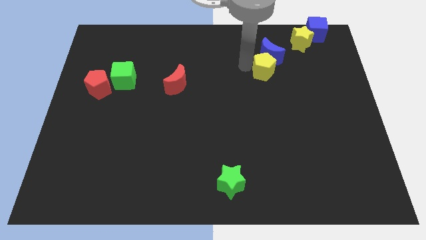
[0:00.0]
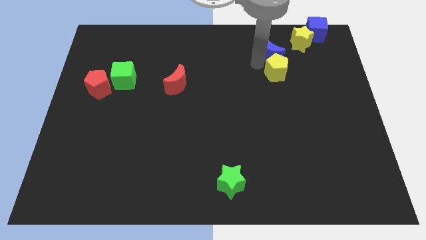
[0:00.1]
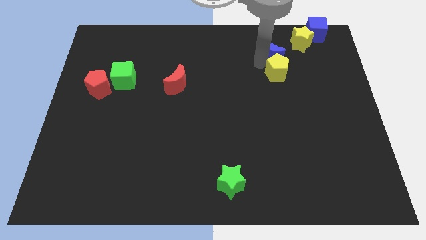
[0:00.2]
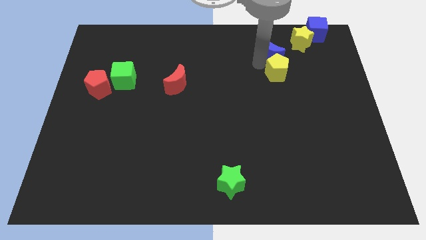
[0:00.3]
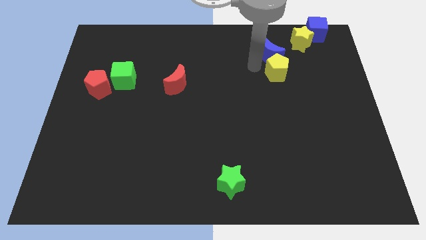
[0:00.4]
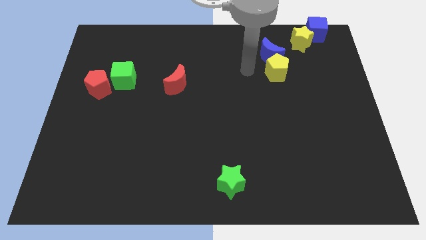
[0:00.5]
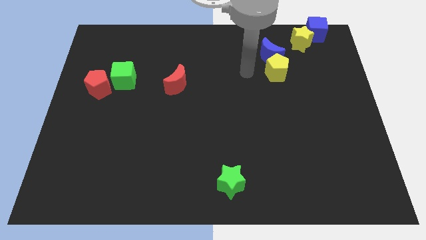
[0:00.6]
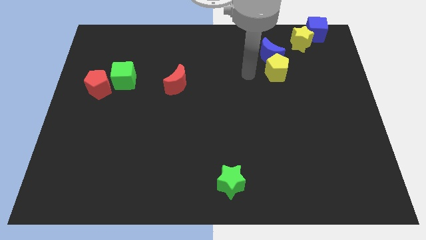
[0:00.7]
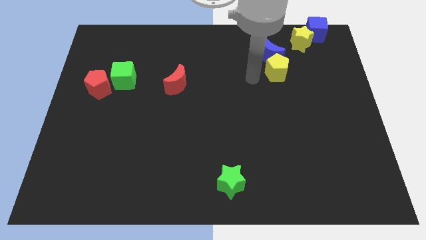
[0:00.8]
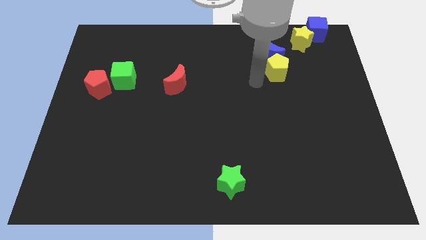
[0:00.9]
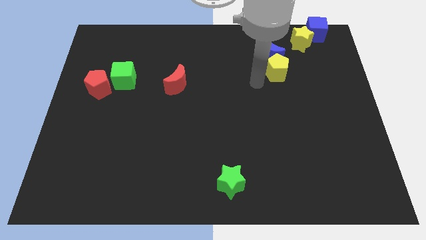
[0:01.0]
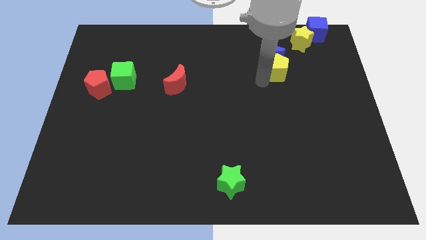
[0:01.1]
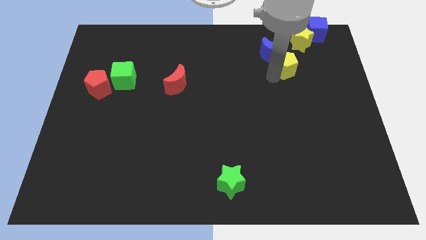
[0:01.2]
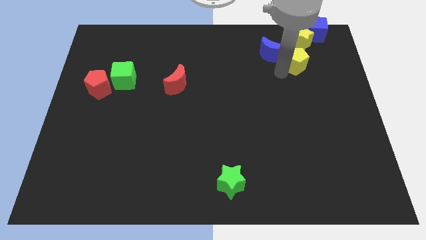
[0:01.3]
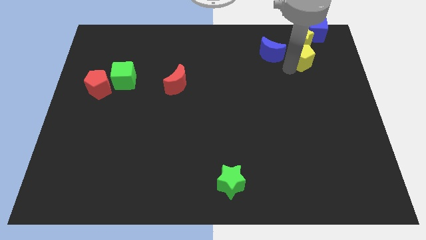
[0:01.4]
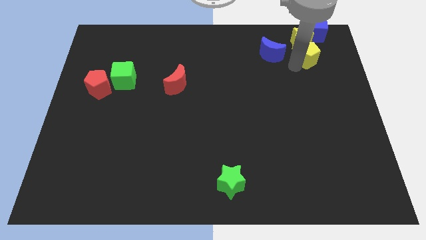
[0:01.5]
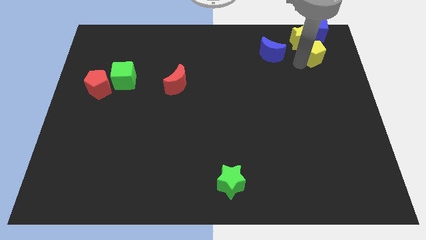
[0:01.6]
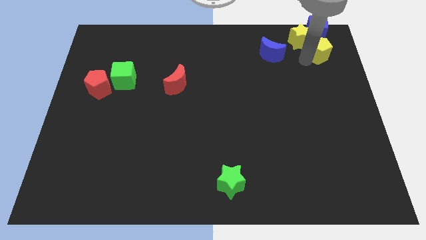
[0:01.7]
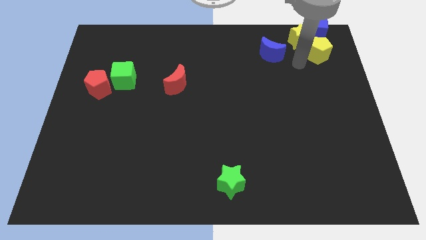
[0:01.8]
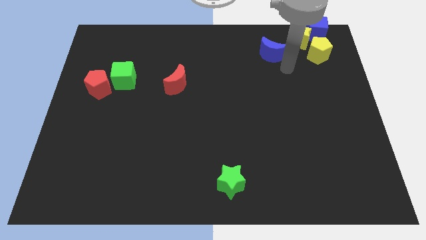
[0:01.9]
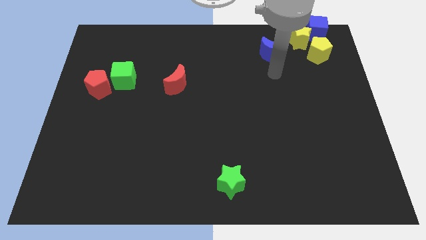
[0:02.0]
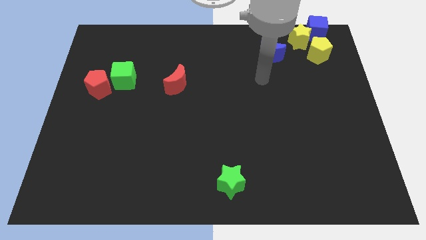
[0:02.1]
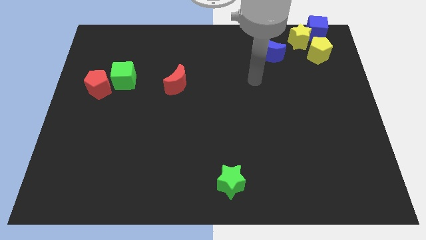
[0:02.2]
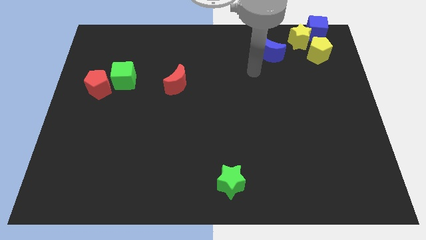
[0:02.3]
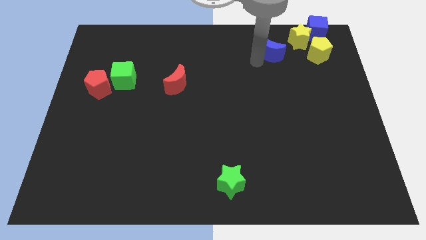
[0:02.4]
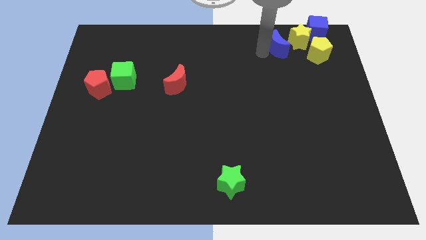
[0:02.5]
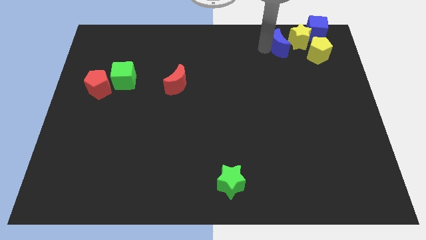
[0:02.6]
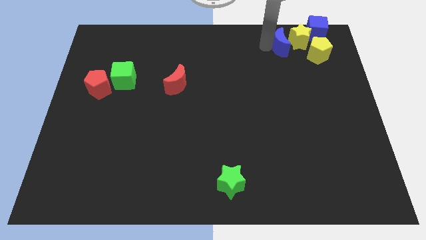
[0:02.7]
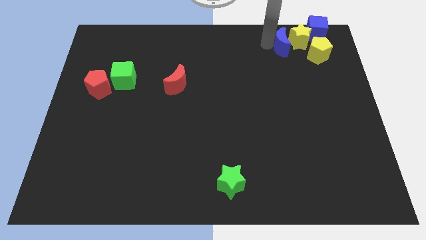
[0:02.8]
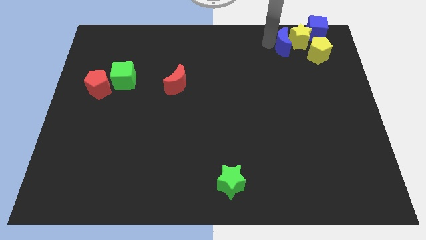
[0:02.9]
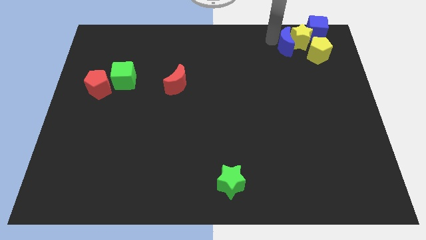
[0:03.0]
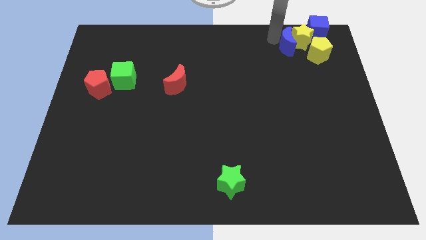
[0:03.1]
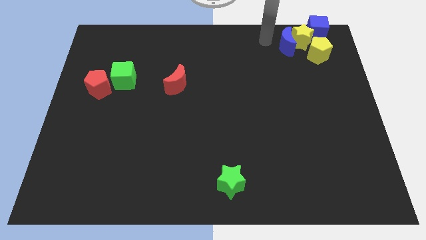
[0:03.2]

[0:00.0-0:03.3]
push blue crescent into yellow star

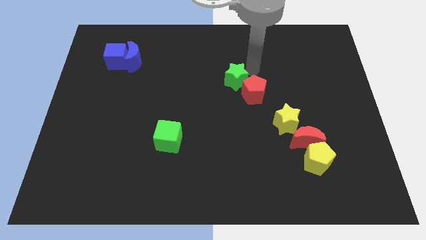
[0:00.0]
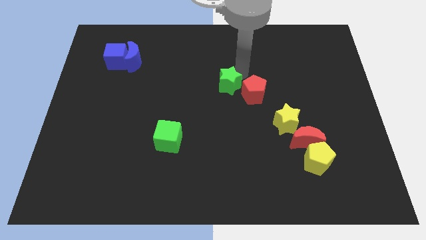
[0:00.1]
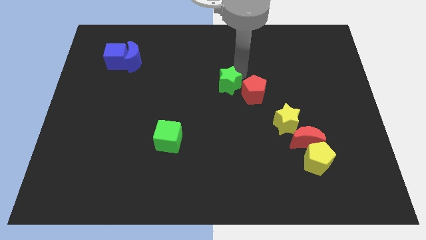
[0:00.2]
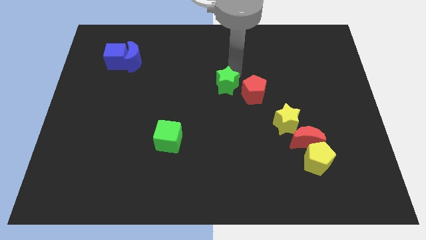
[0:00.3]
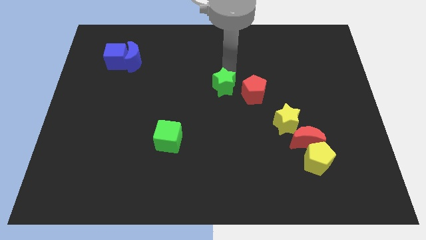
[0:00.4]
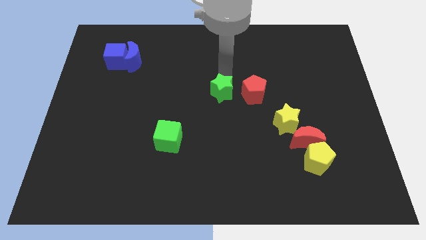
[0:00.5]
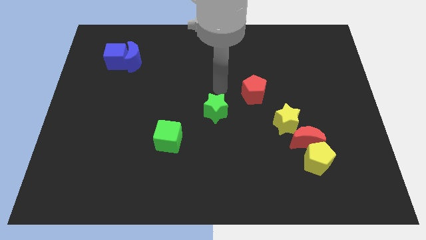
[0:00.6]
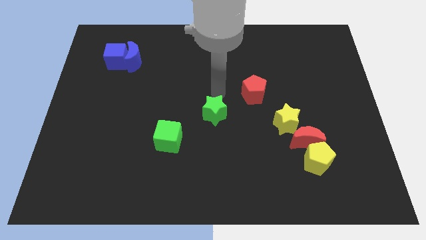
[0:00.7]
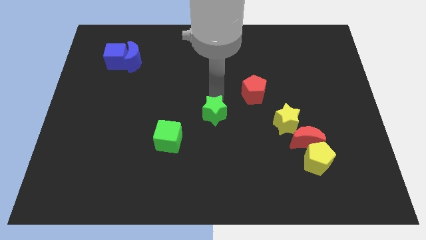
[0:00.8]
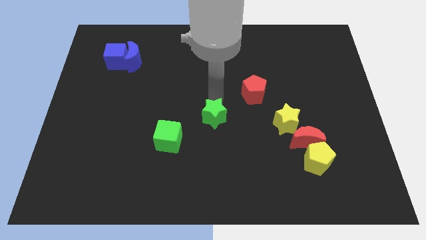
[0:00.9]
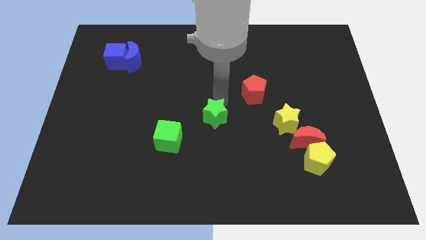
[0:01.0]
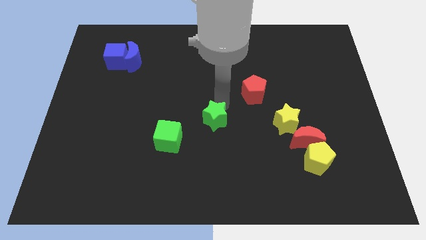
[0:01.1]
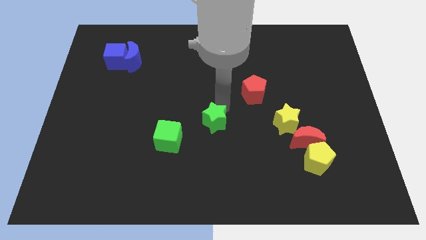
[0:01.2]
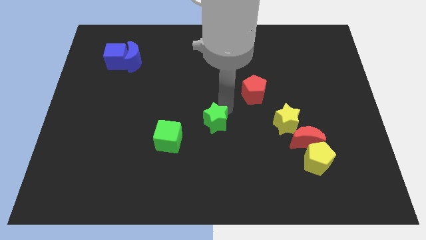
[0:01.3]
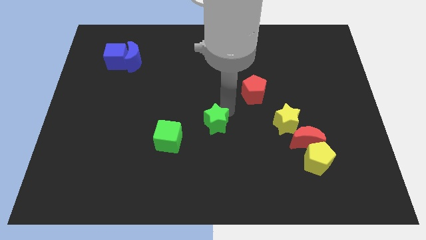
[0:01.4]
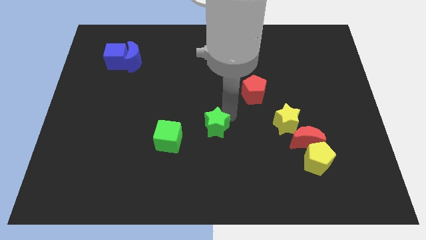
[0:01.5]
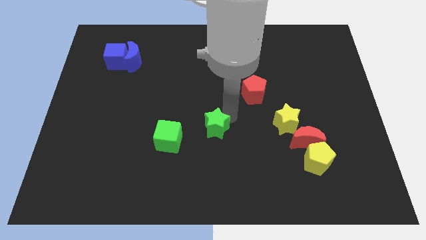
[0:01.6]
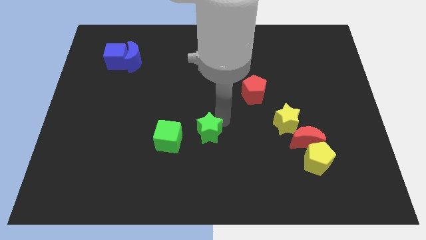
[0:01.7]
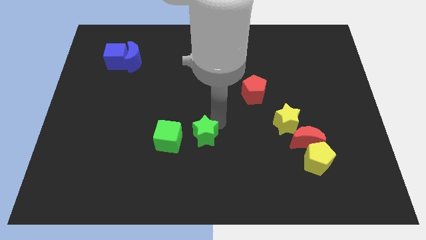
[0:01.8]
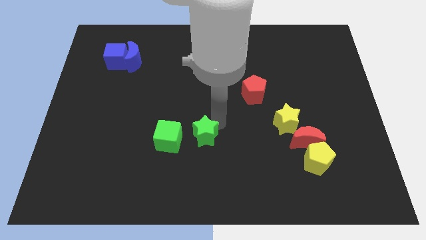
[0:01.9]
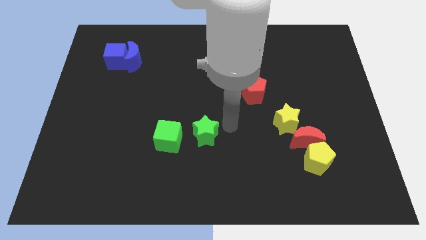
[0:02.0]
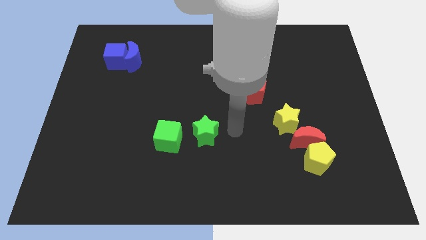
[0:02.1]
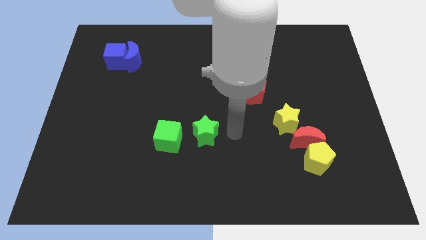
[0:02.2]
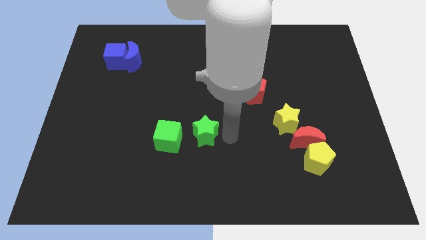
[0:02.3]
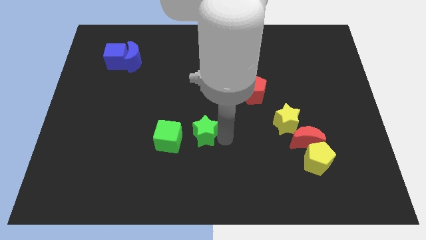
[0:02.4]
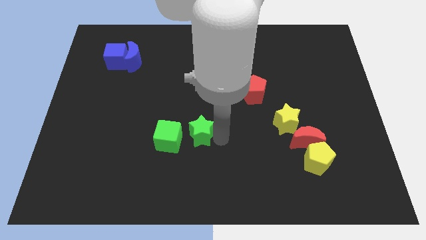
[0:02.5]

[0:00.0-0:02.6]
push the green star towards the bottom of the board

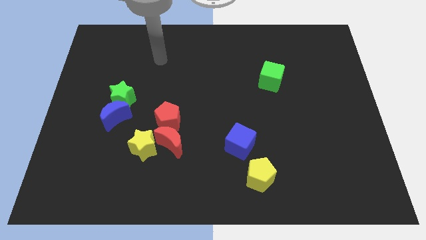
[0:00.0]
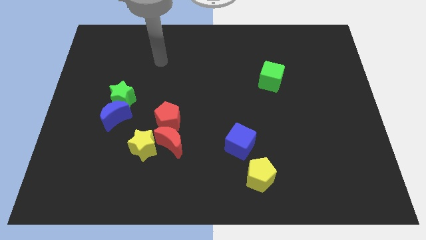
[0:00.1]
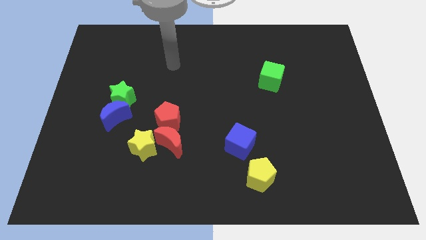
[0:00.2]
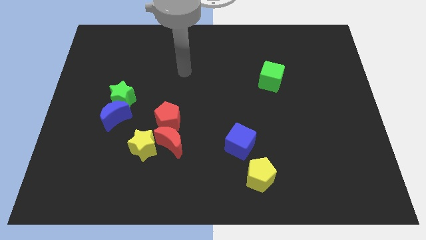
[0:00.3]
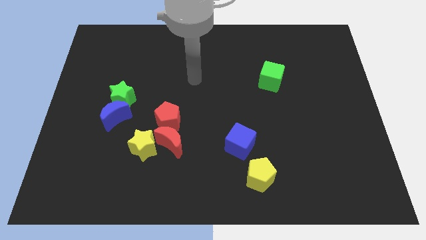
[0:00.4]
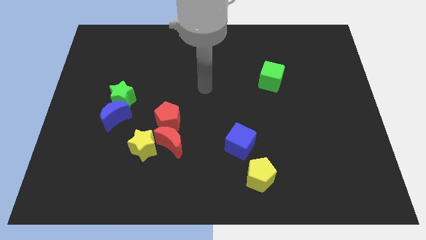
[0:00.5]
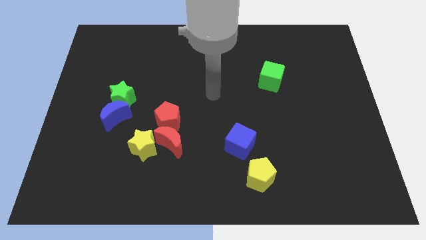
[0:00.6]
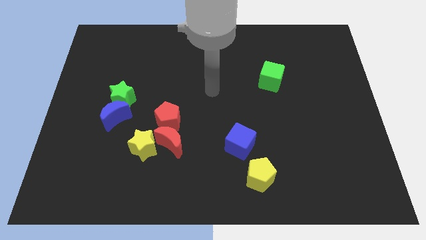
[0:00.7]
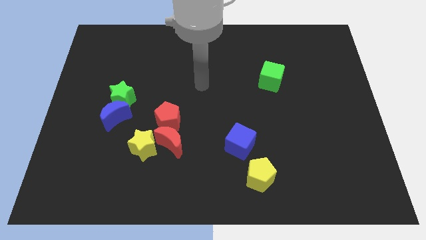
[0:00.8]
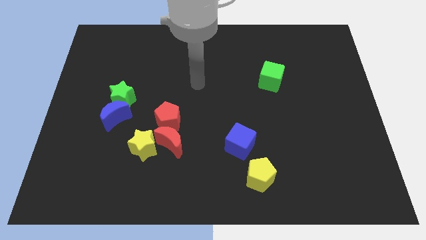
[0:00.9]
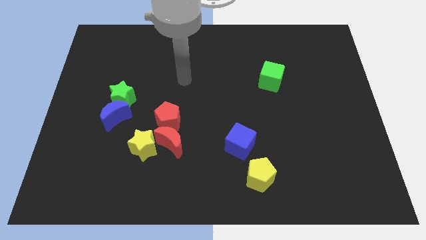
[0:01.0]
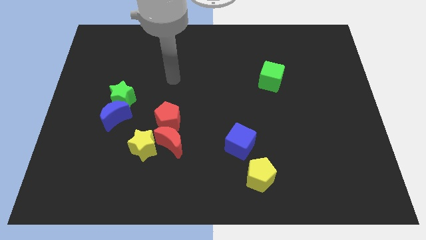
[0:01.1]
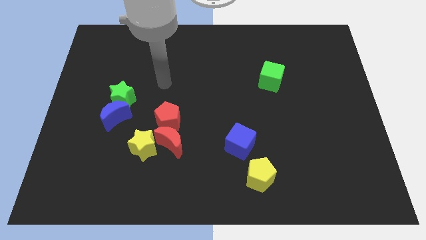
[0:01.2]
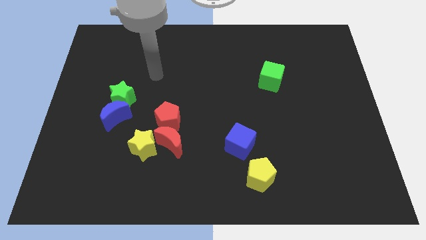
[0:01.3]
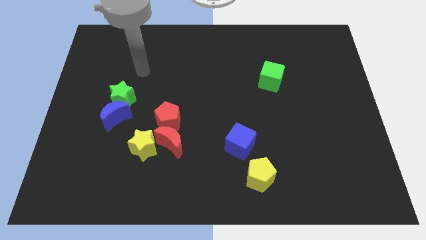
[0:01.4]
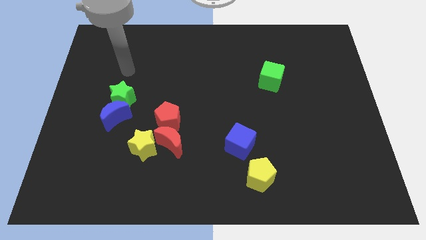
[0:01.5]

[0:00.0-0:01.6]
point the arm above the green star

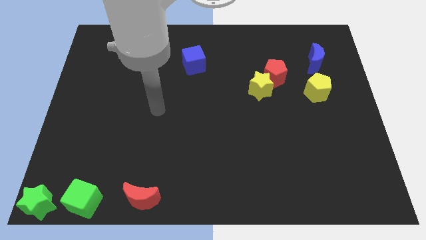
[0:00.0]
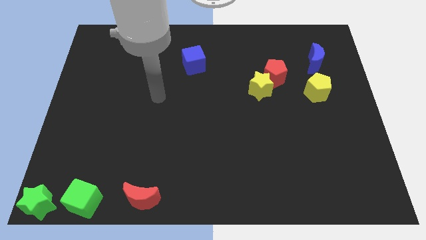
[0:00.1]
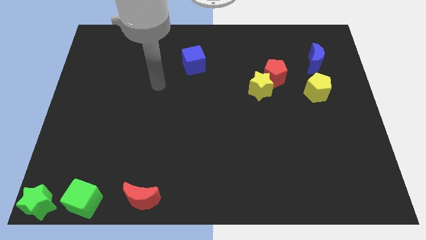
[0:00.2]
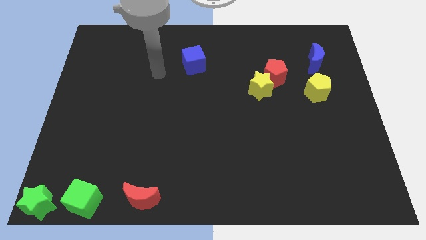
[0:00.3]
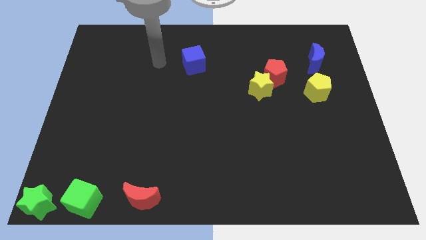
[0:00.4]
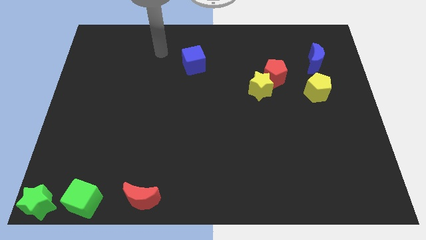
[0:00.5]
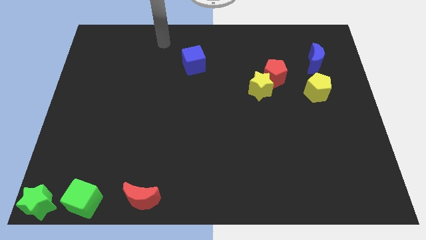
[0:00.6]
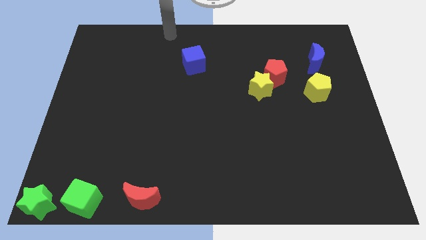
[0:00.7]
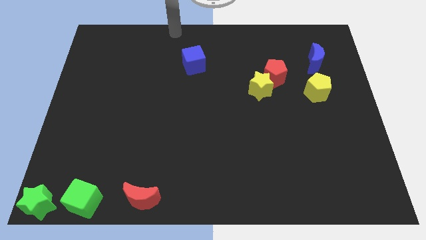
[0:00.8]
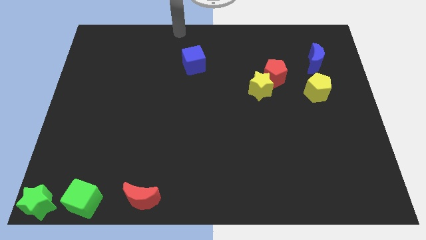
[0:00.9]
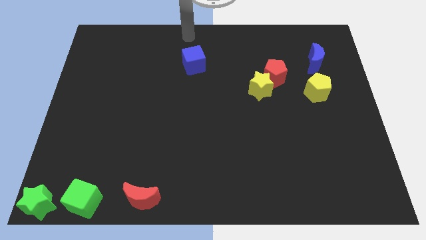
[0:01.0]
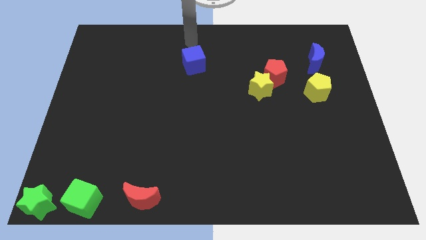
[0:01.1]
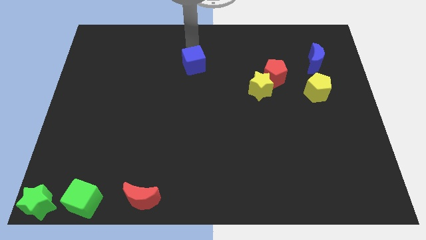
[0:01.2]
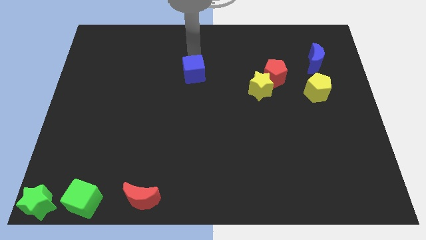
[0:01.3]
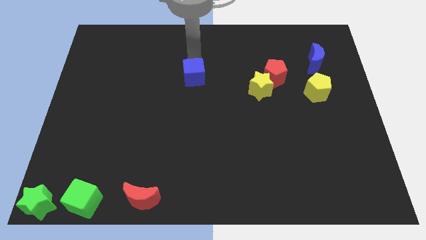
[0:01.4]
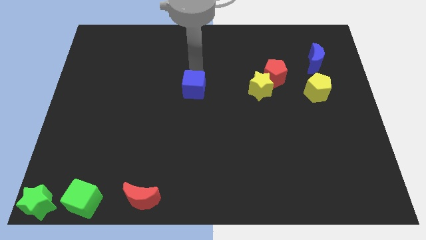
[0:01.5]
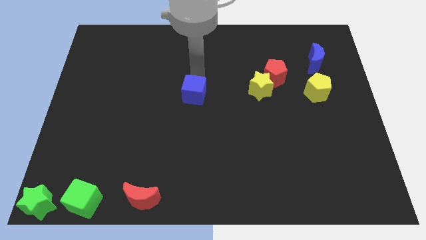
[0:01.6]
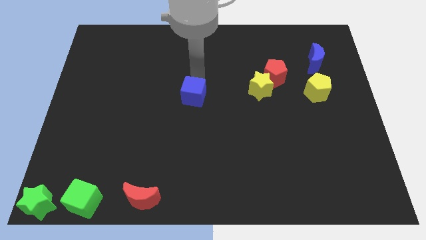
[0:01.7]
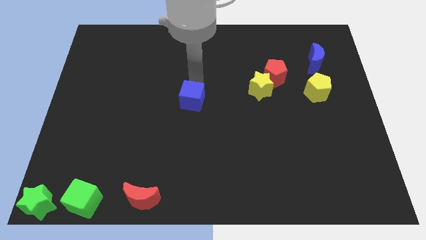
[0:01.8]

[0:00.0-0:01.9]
slide the blue cube towards the bottom
